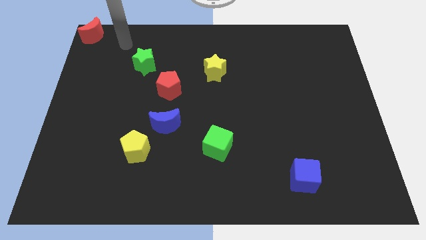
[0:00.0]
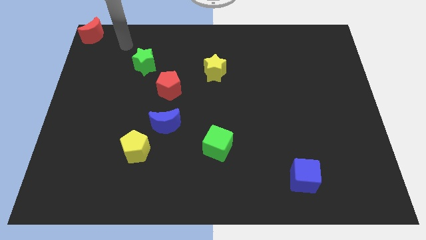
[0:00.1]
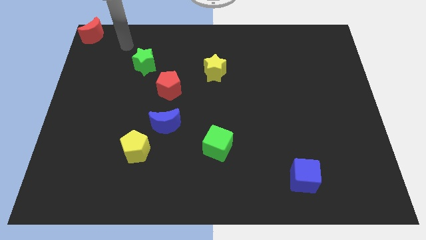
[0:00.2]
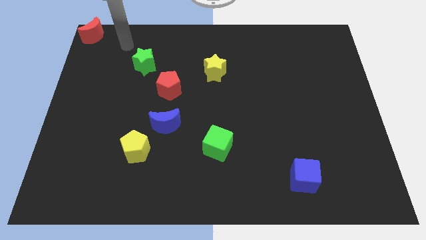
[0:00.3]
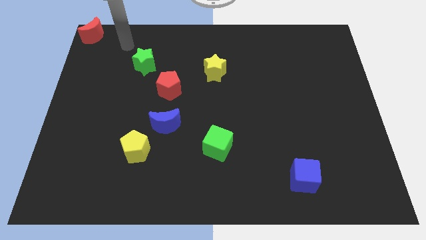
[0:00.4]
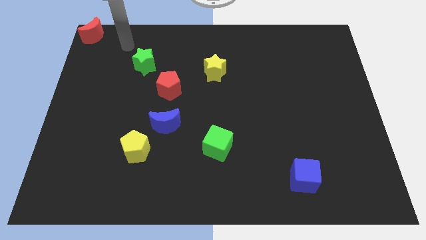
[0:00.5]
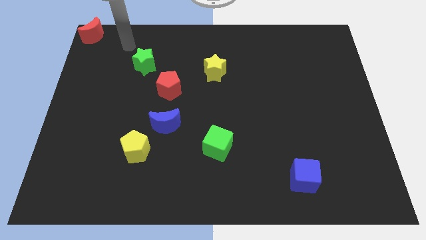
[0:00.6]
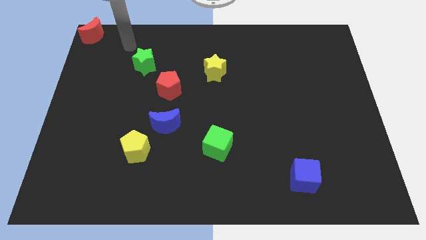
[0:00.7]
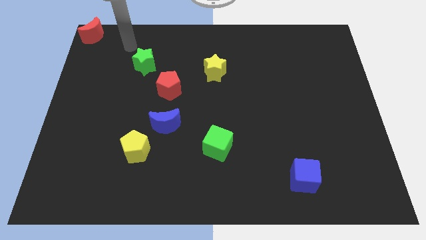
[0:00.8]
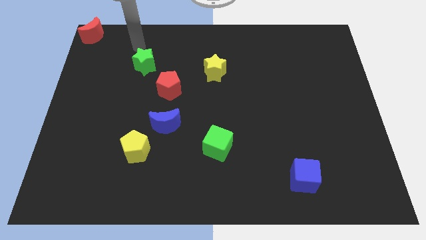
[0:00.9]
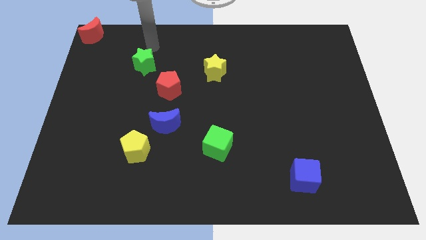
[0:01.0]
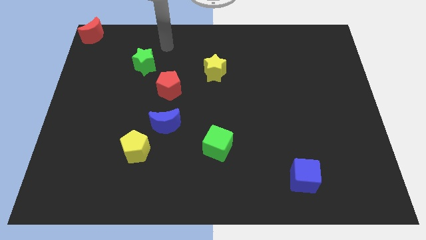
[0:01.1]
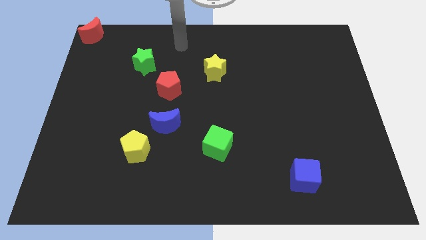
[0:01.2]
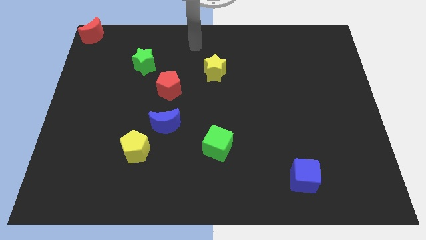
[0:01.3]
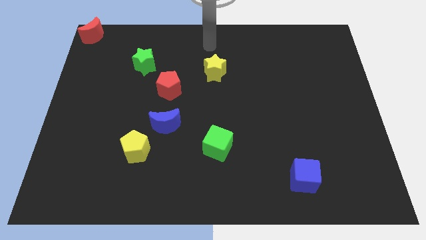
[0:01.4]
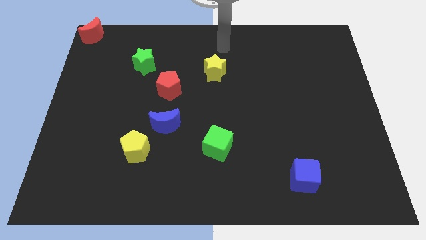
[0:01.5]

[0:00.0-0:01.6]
place your arm above the yellow star

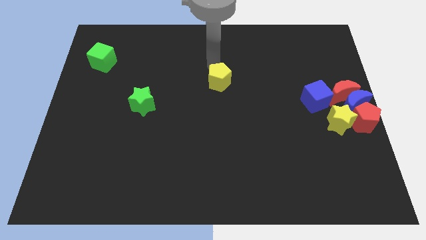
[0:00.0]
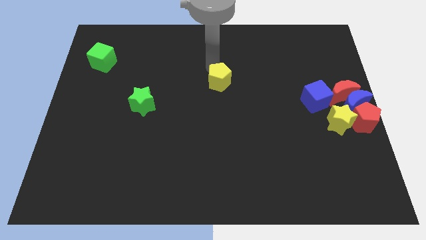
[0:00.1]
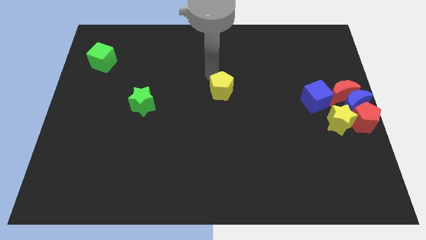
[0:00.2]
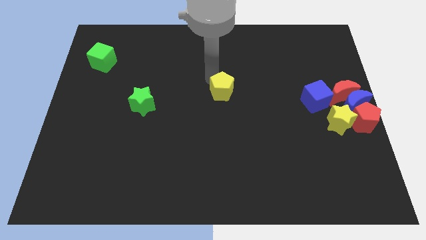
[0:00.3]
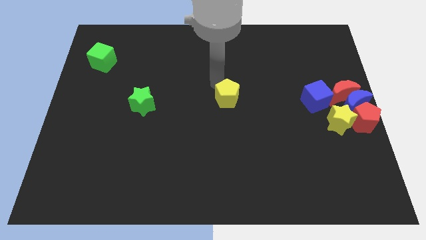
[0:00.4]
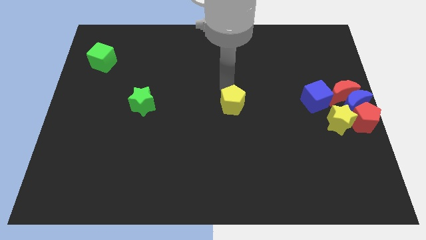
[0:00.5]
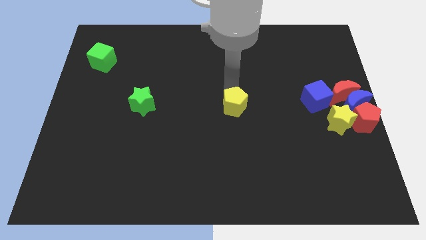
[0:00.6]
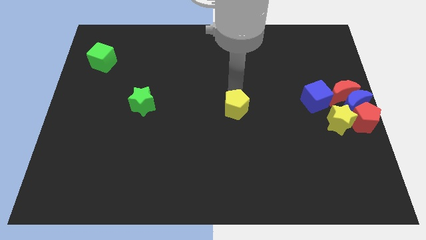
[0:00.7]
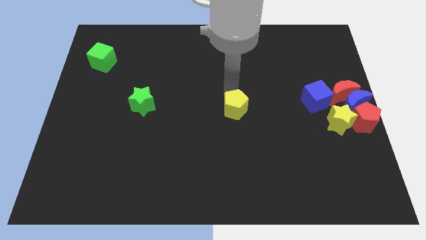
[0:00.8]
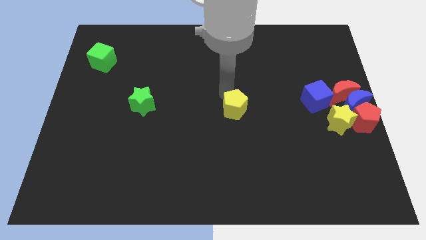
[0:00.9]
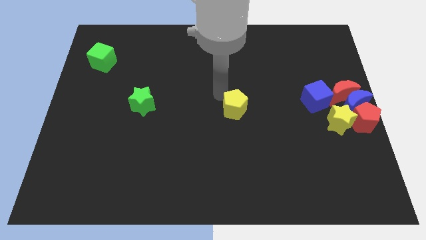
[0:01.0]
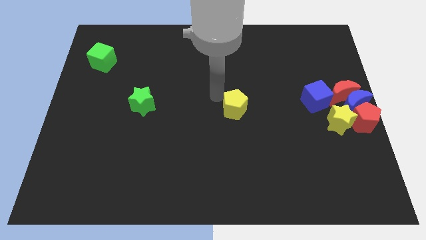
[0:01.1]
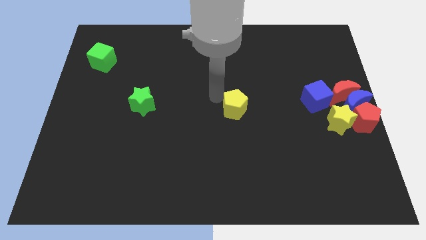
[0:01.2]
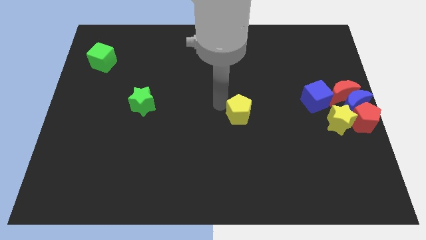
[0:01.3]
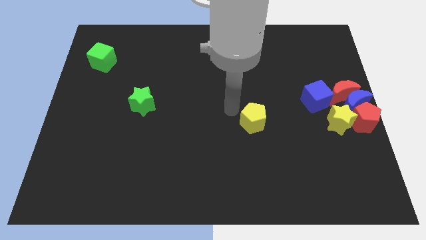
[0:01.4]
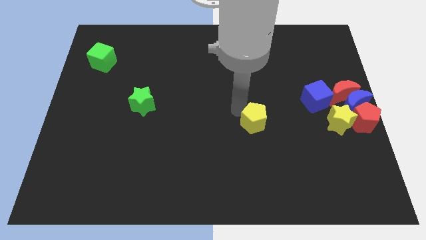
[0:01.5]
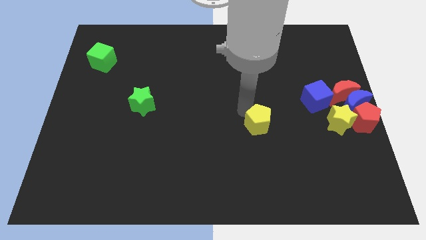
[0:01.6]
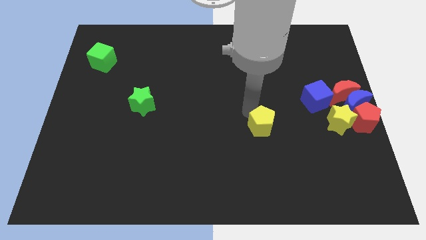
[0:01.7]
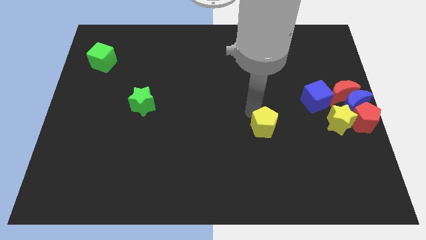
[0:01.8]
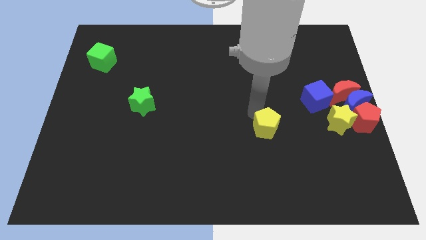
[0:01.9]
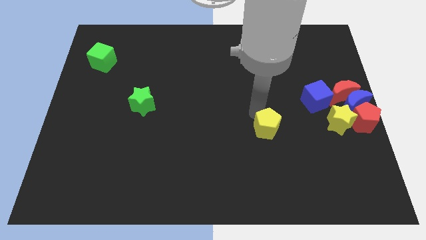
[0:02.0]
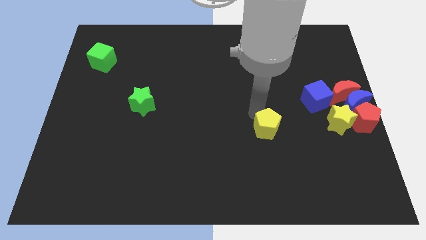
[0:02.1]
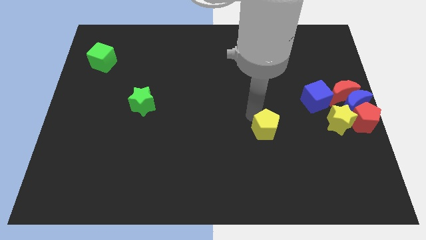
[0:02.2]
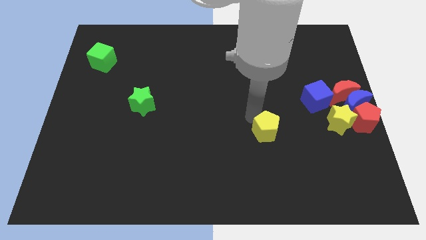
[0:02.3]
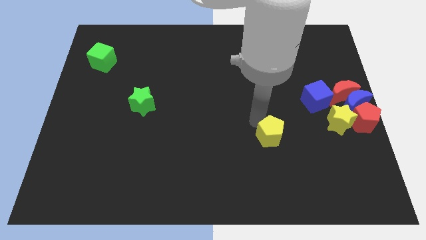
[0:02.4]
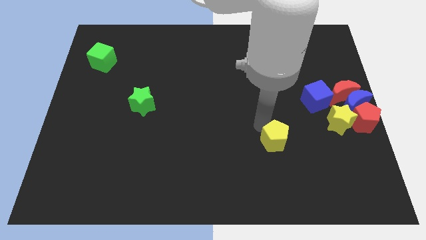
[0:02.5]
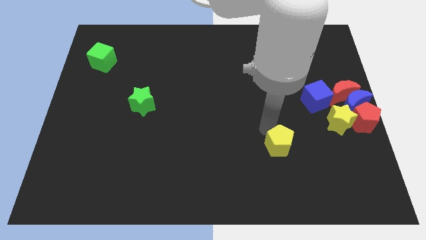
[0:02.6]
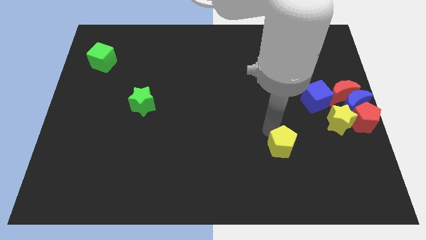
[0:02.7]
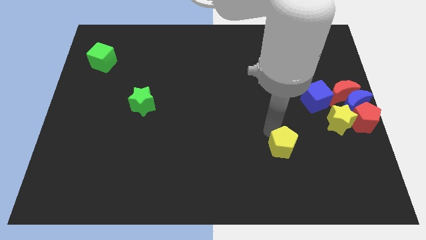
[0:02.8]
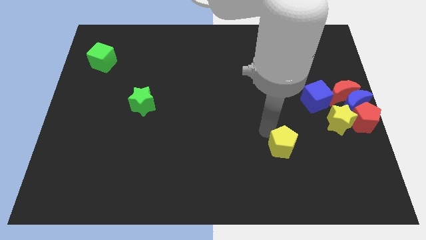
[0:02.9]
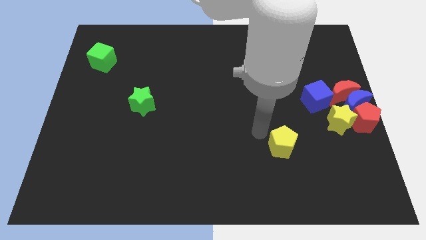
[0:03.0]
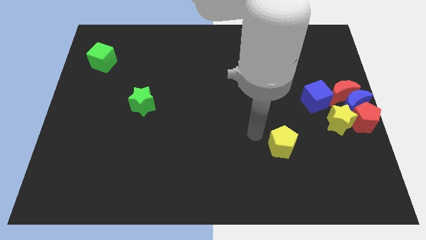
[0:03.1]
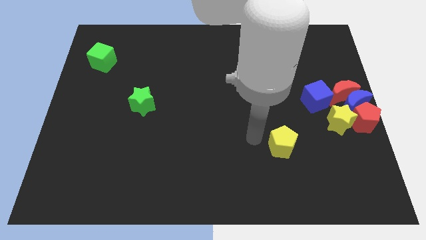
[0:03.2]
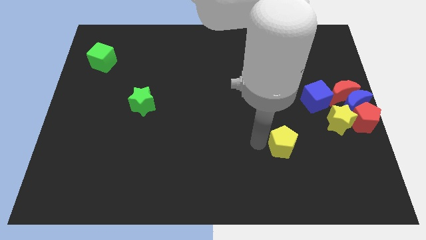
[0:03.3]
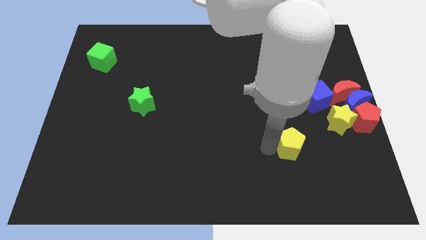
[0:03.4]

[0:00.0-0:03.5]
drag the yellow pentagon slightly to the bottom of the board

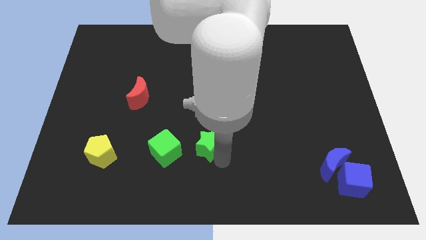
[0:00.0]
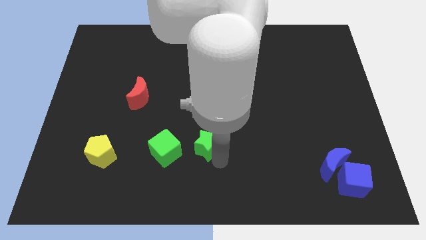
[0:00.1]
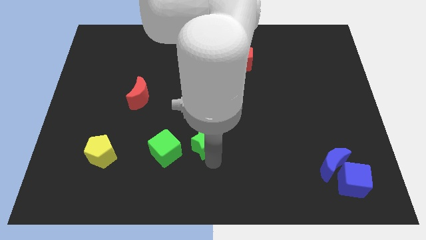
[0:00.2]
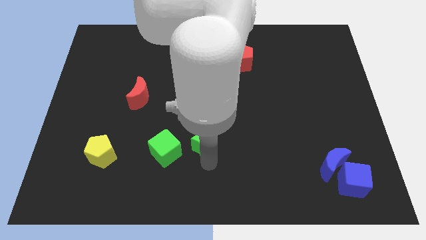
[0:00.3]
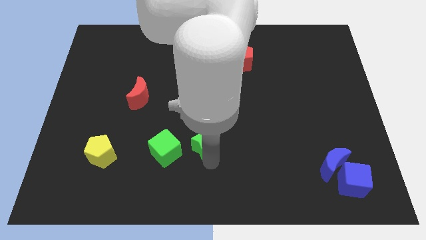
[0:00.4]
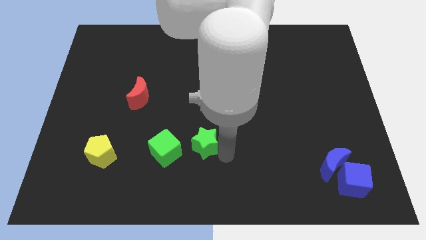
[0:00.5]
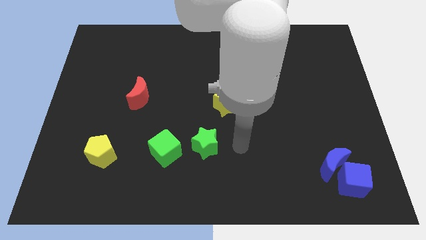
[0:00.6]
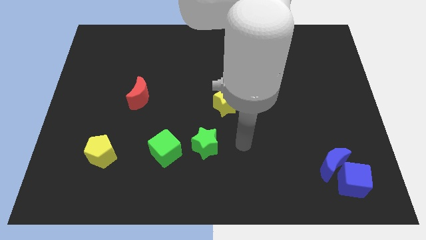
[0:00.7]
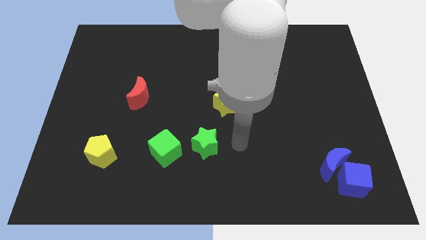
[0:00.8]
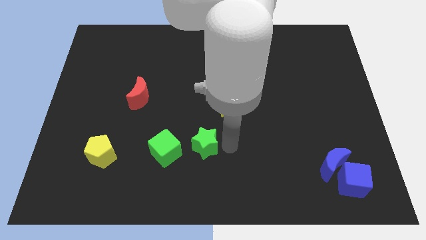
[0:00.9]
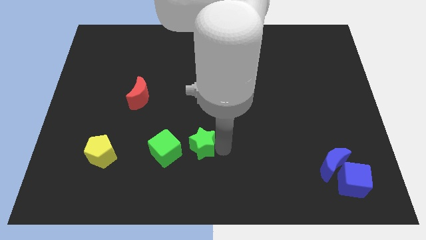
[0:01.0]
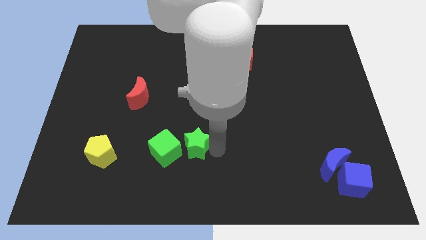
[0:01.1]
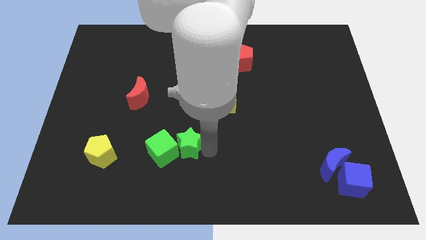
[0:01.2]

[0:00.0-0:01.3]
push the green star into the green cube

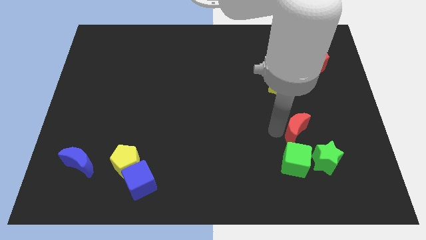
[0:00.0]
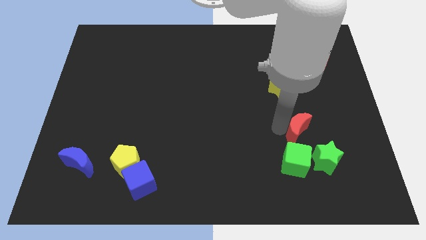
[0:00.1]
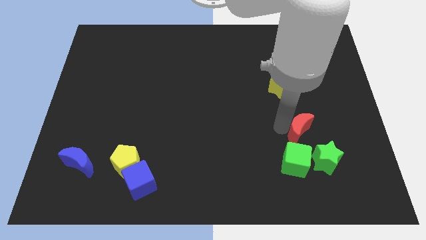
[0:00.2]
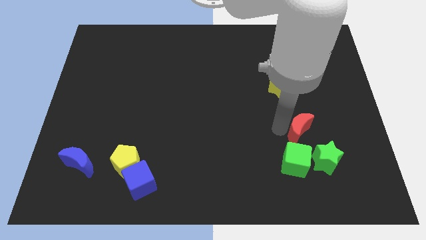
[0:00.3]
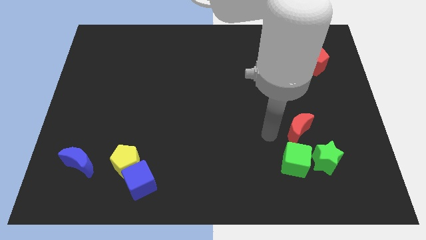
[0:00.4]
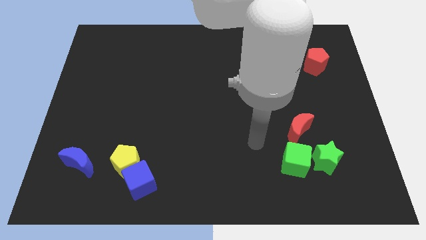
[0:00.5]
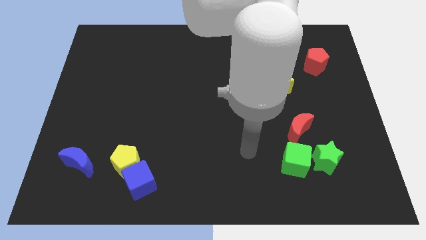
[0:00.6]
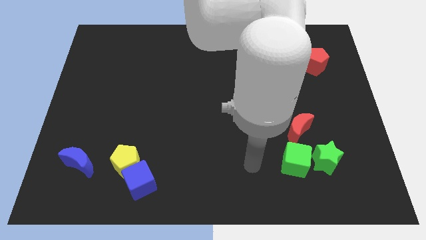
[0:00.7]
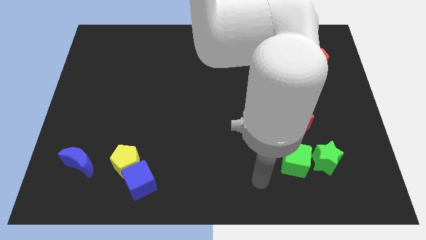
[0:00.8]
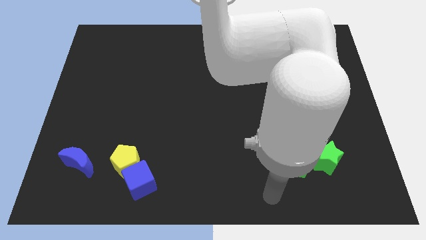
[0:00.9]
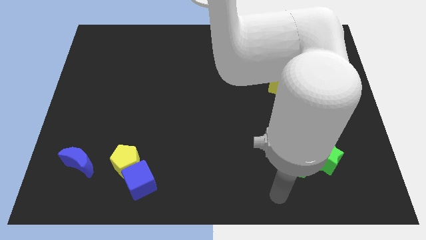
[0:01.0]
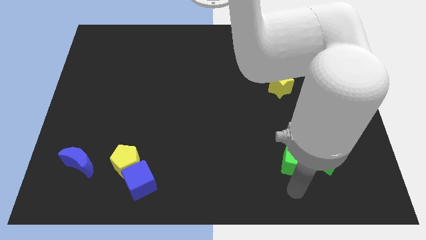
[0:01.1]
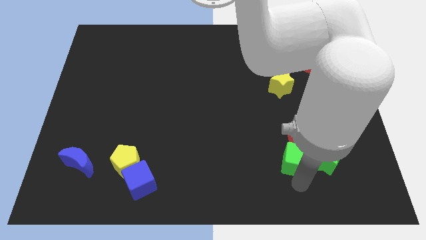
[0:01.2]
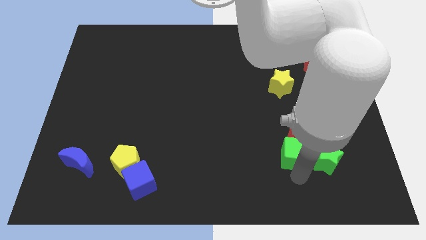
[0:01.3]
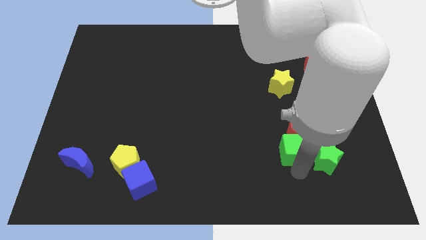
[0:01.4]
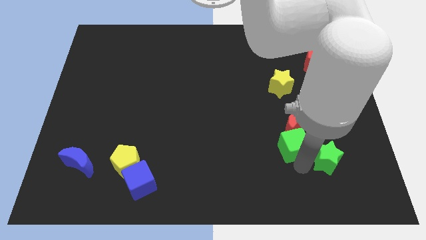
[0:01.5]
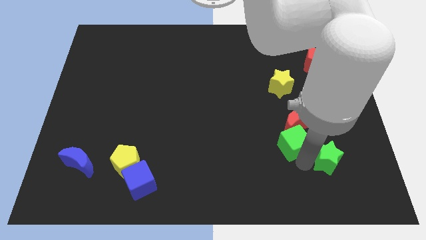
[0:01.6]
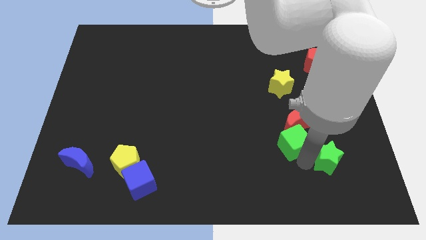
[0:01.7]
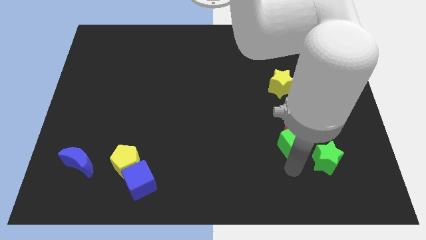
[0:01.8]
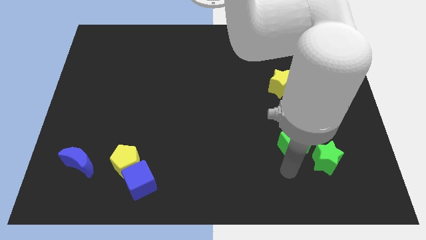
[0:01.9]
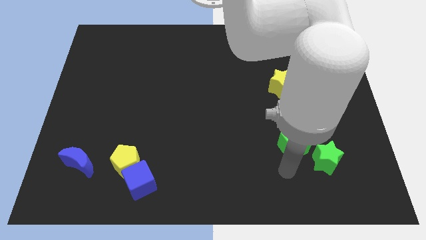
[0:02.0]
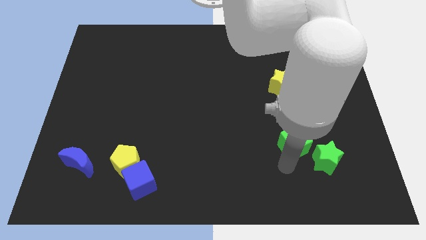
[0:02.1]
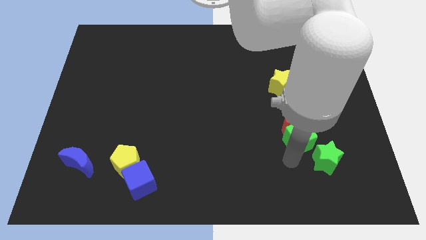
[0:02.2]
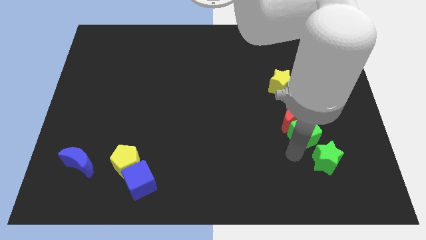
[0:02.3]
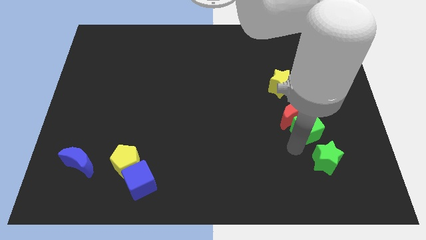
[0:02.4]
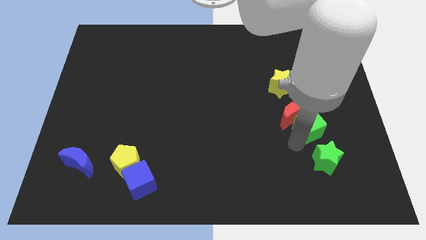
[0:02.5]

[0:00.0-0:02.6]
place green cube in between green star and red crescent
